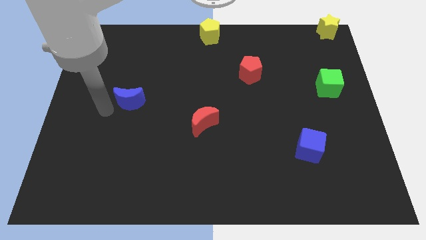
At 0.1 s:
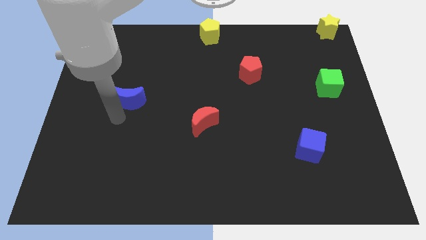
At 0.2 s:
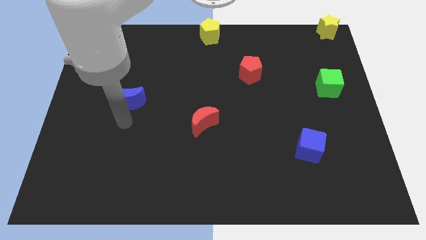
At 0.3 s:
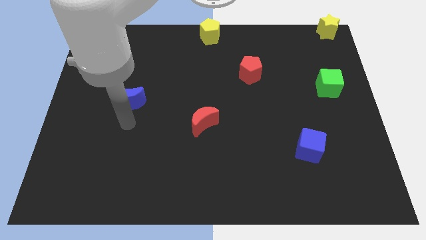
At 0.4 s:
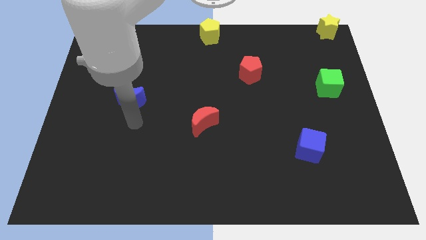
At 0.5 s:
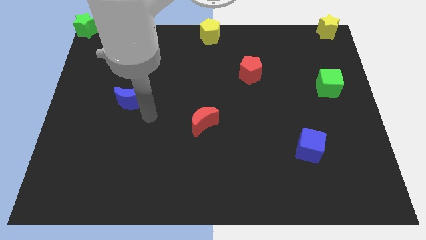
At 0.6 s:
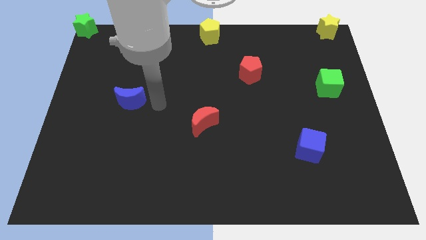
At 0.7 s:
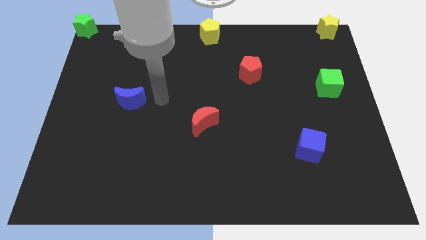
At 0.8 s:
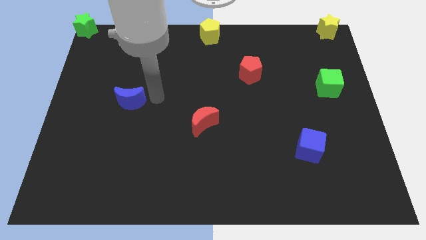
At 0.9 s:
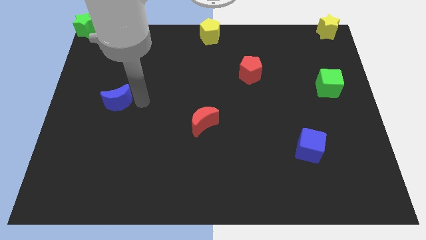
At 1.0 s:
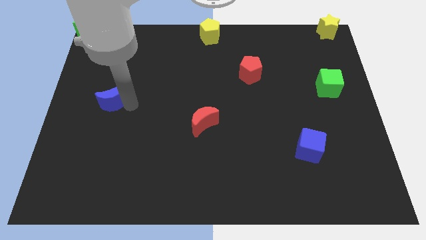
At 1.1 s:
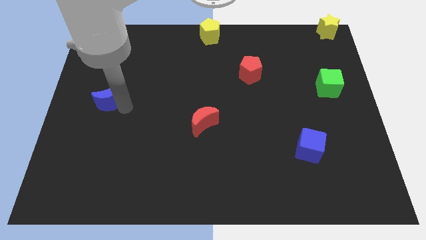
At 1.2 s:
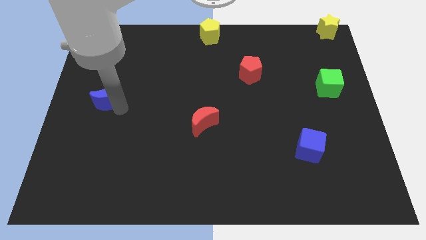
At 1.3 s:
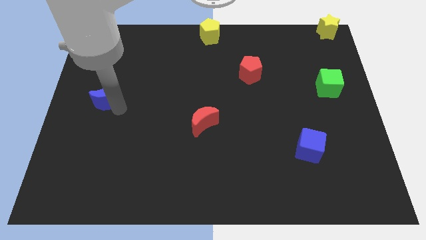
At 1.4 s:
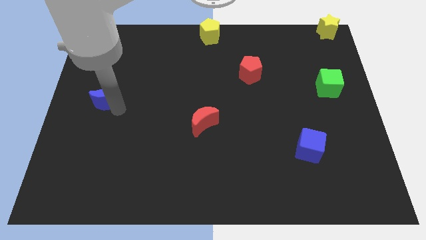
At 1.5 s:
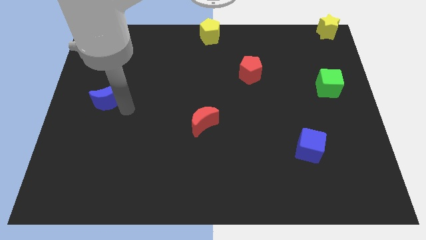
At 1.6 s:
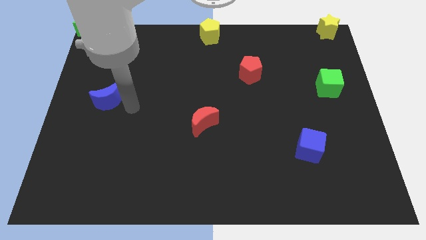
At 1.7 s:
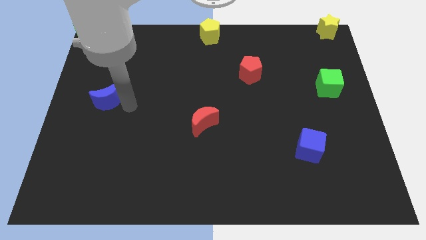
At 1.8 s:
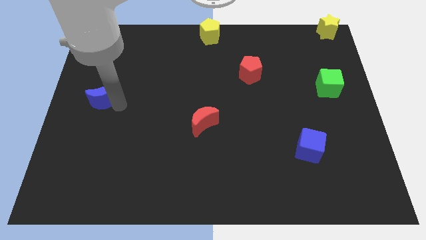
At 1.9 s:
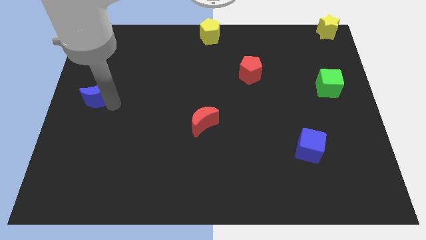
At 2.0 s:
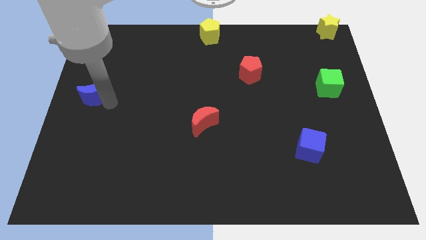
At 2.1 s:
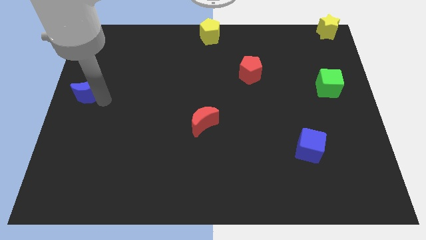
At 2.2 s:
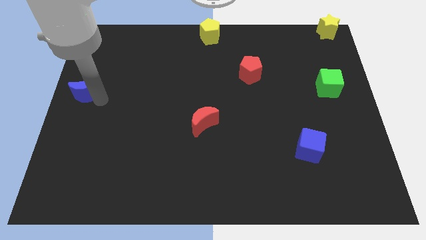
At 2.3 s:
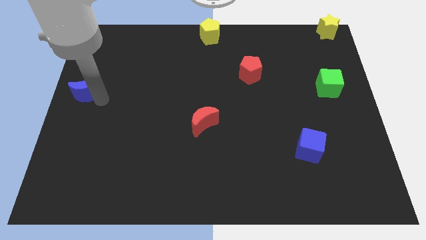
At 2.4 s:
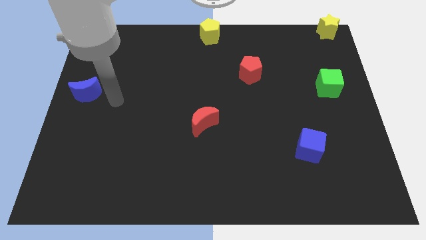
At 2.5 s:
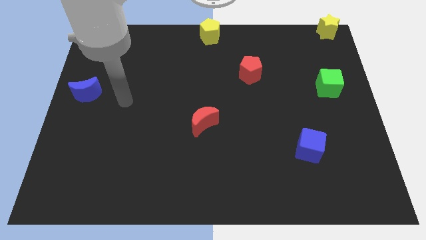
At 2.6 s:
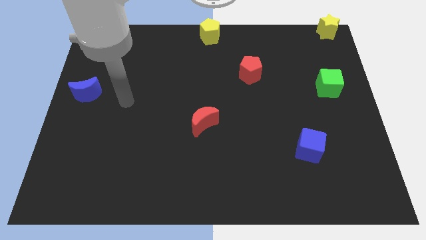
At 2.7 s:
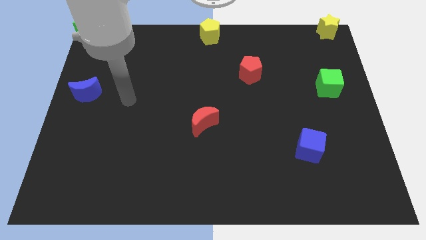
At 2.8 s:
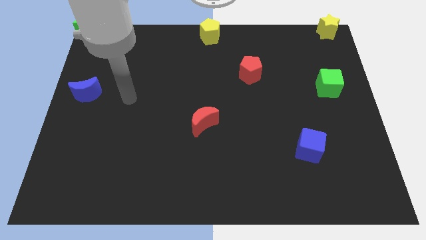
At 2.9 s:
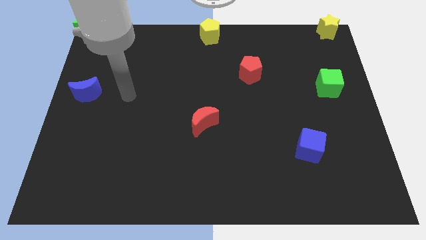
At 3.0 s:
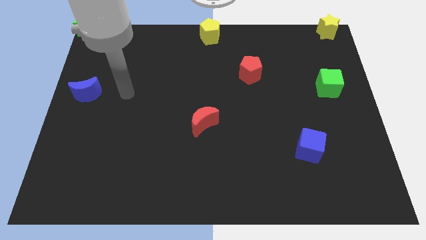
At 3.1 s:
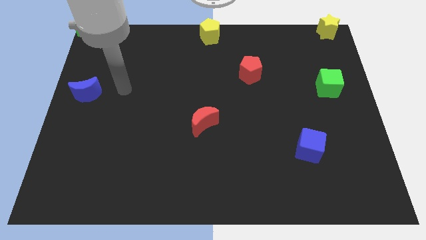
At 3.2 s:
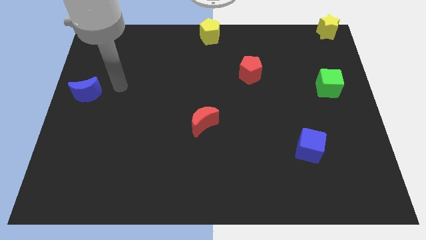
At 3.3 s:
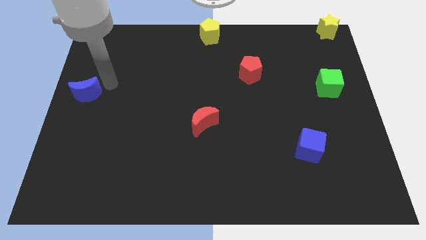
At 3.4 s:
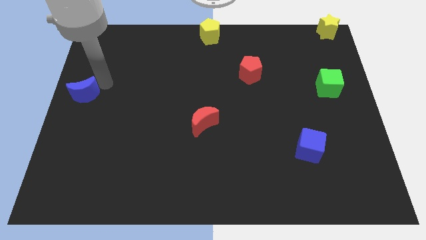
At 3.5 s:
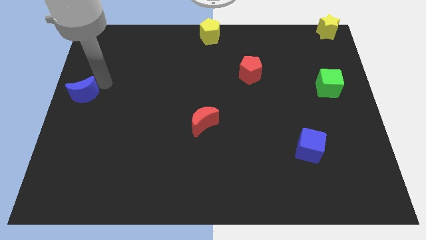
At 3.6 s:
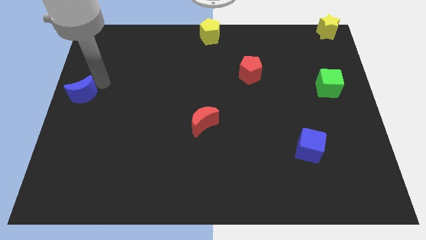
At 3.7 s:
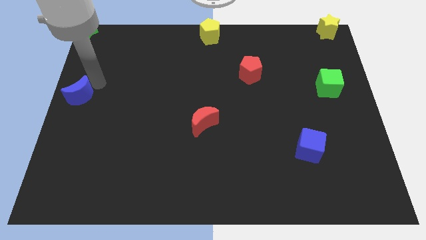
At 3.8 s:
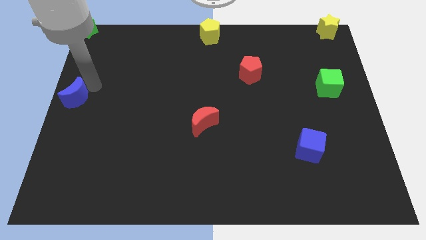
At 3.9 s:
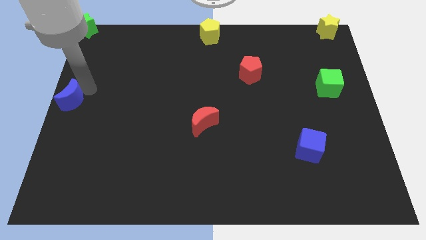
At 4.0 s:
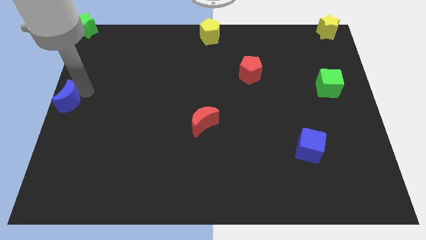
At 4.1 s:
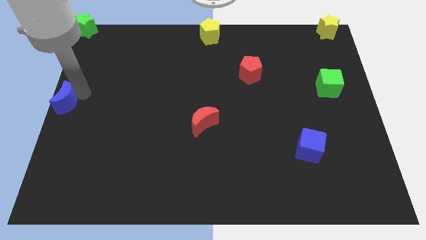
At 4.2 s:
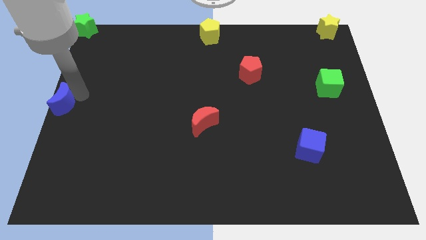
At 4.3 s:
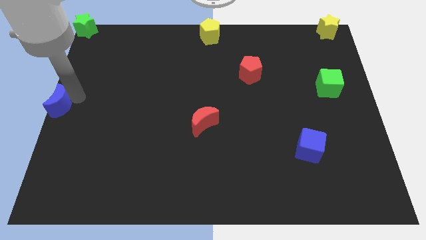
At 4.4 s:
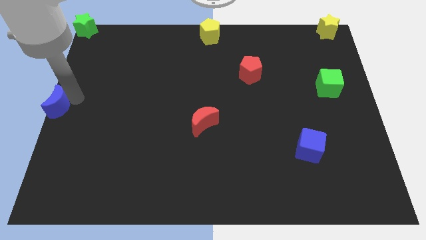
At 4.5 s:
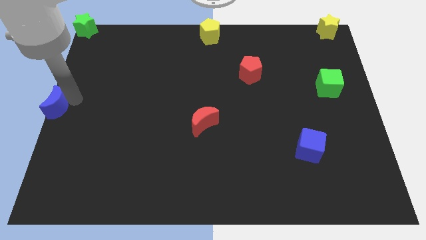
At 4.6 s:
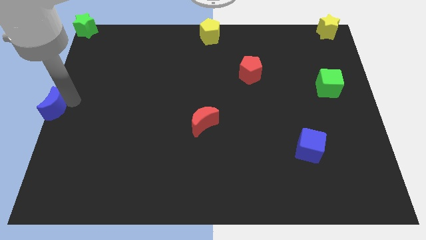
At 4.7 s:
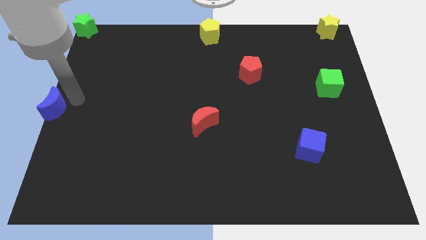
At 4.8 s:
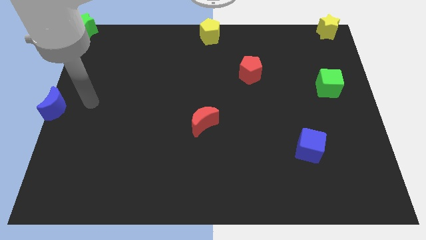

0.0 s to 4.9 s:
place the blue moon to the middle left of the board

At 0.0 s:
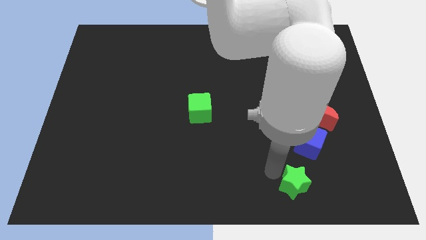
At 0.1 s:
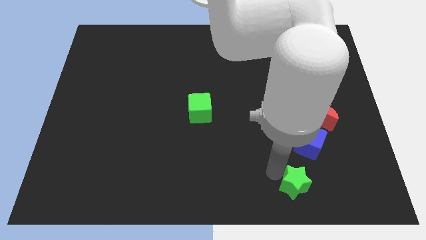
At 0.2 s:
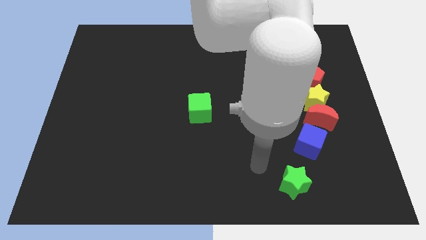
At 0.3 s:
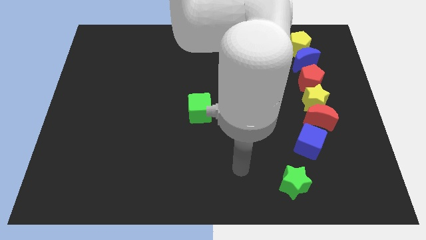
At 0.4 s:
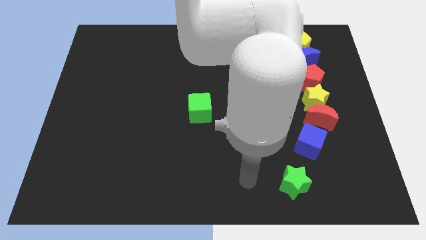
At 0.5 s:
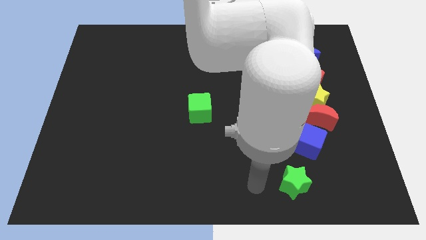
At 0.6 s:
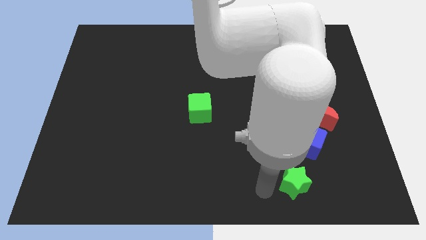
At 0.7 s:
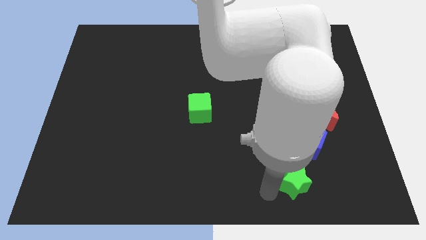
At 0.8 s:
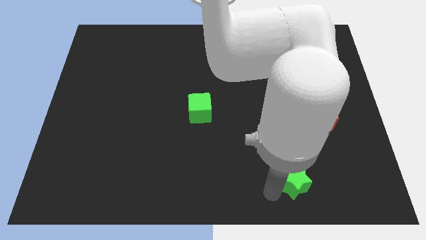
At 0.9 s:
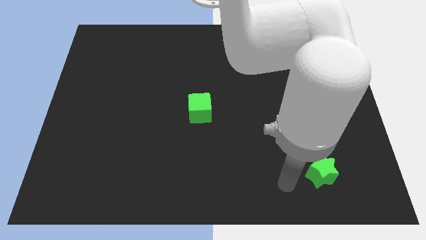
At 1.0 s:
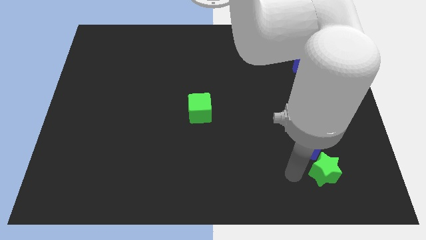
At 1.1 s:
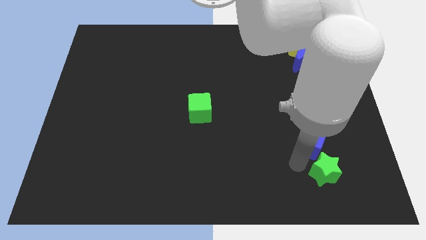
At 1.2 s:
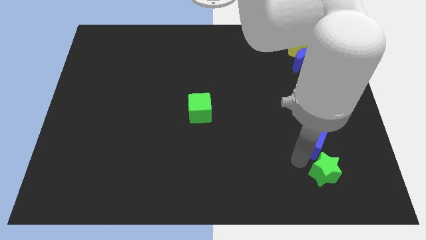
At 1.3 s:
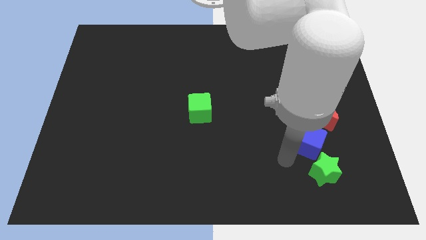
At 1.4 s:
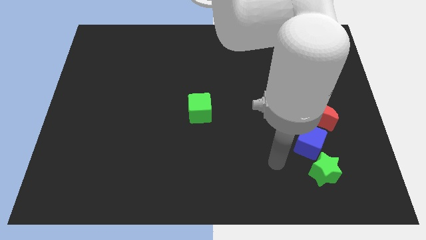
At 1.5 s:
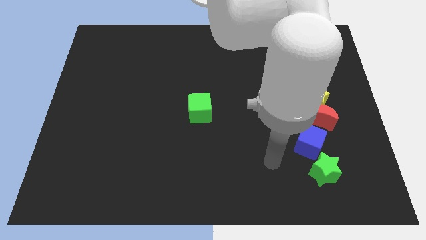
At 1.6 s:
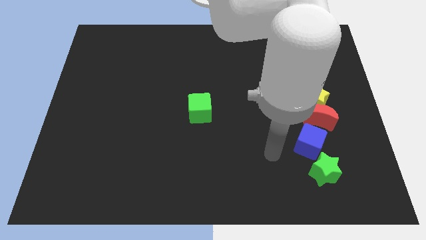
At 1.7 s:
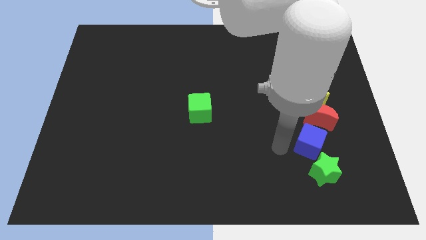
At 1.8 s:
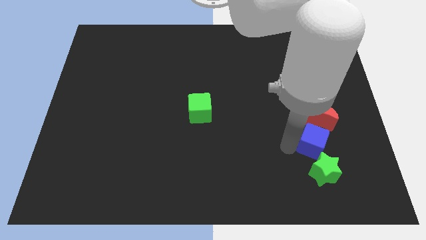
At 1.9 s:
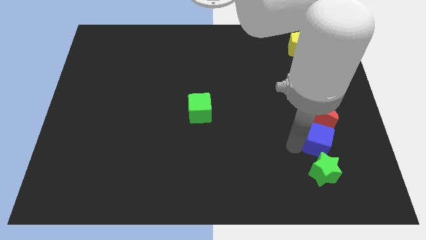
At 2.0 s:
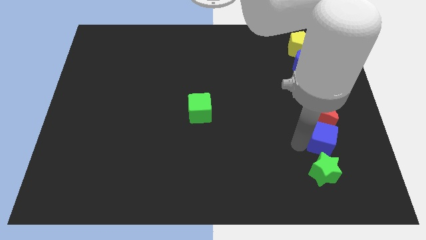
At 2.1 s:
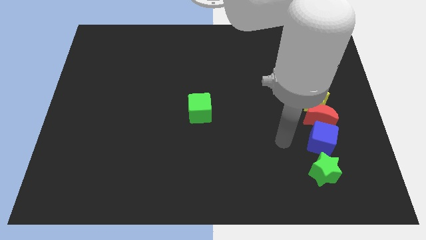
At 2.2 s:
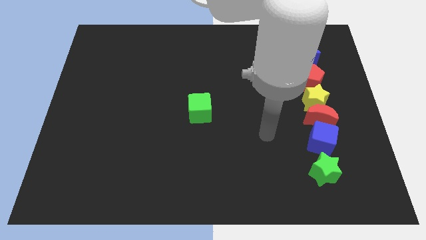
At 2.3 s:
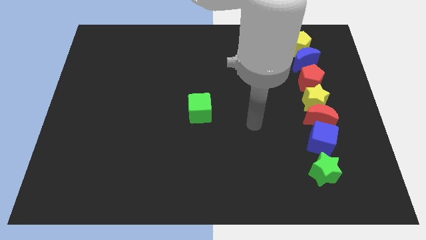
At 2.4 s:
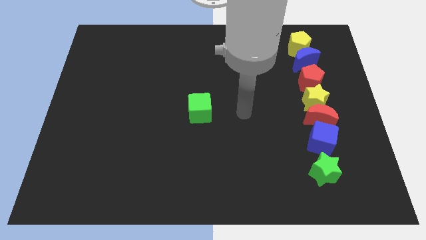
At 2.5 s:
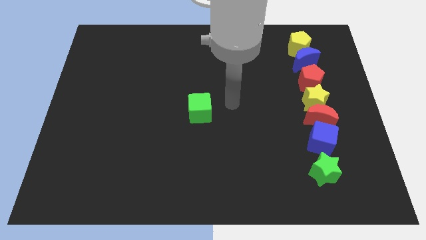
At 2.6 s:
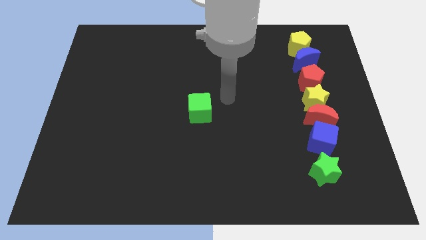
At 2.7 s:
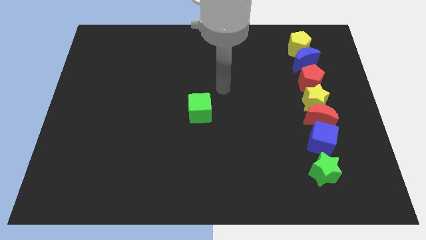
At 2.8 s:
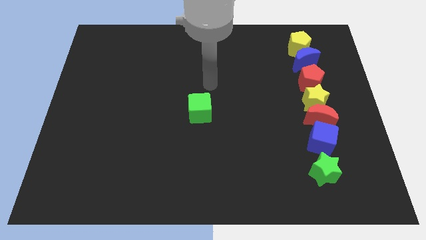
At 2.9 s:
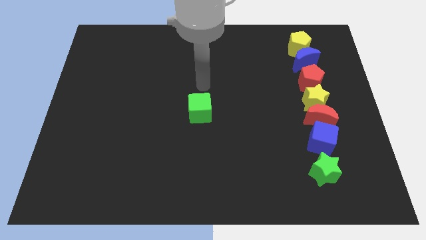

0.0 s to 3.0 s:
slide the green star and the blue cube slightly to the right

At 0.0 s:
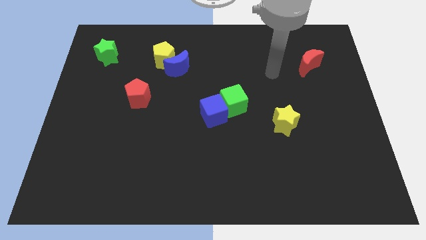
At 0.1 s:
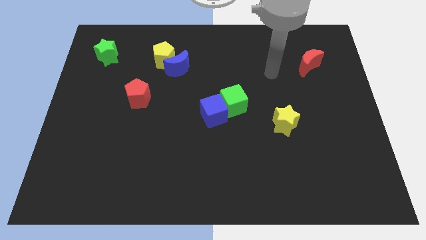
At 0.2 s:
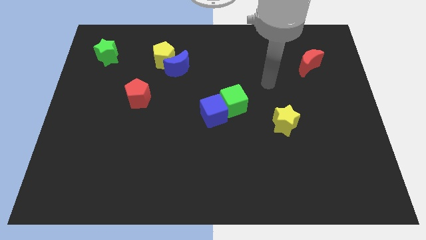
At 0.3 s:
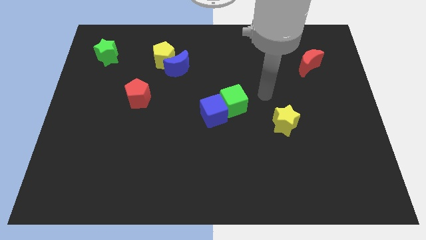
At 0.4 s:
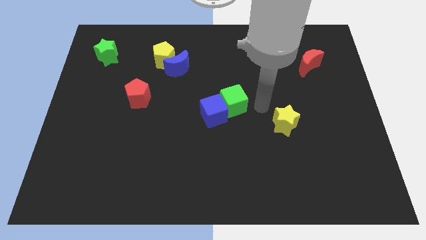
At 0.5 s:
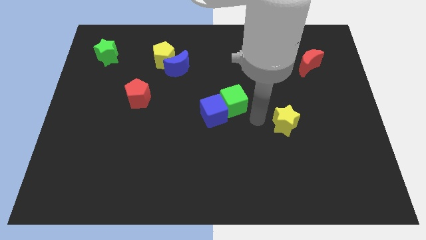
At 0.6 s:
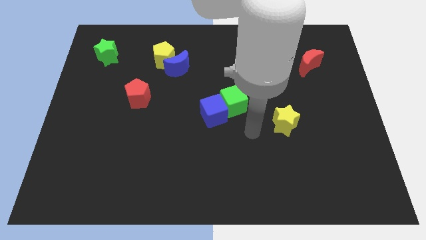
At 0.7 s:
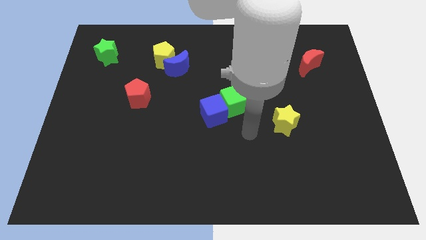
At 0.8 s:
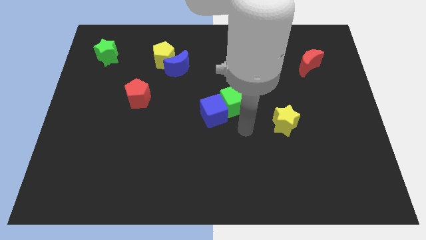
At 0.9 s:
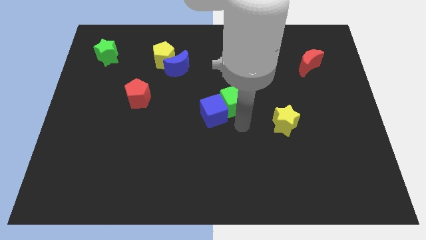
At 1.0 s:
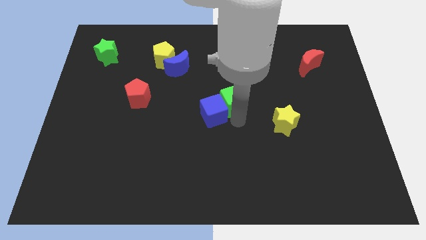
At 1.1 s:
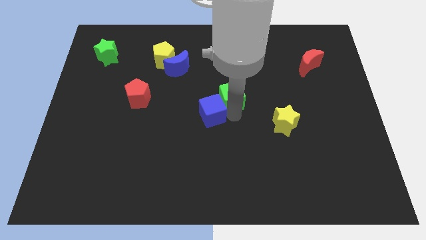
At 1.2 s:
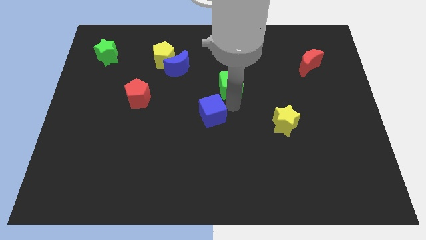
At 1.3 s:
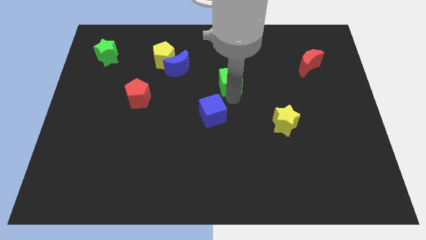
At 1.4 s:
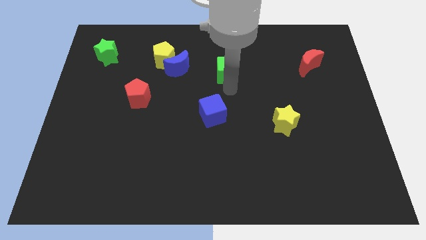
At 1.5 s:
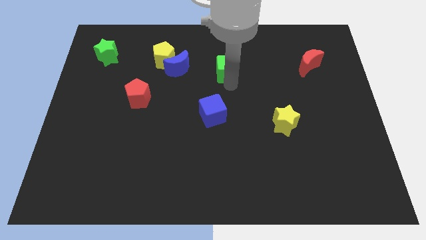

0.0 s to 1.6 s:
move the green cube away from the blue cube
